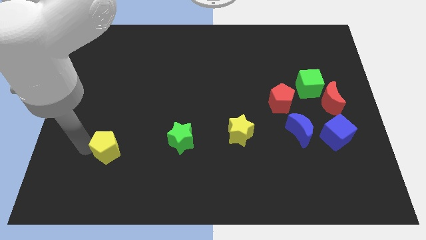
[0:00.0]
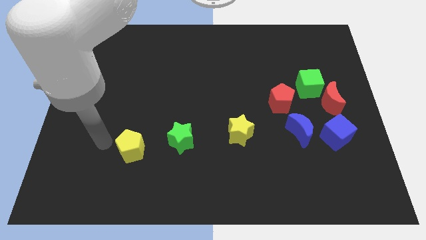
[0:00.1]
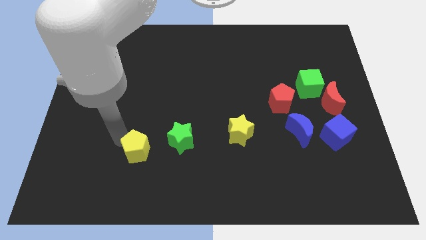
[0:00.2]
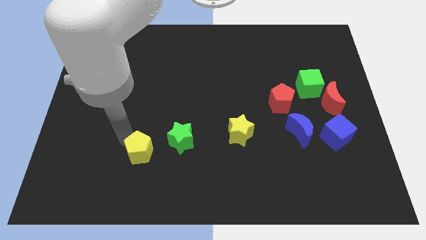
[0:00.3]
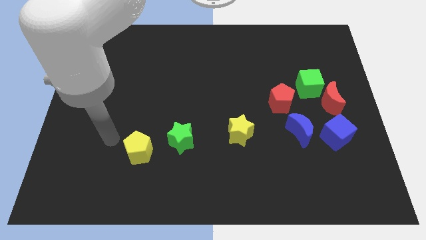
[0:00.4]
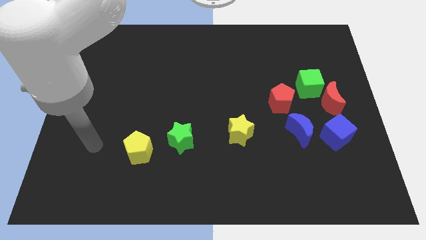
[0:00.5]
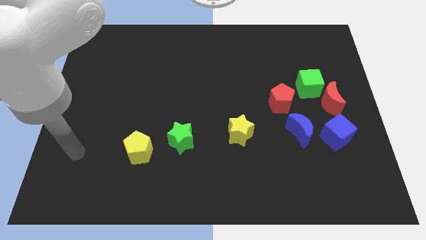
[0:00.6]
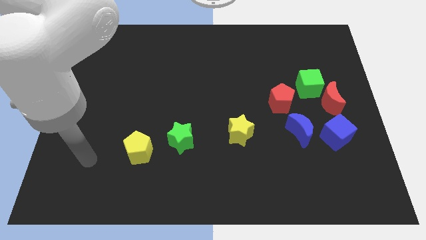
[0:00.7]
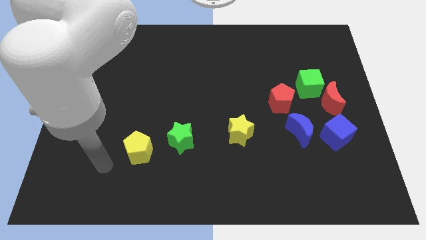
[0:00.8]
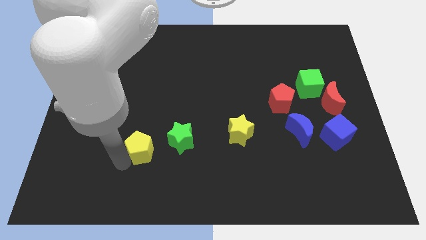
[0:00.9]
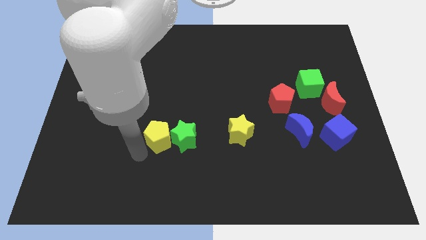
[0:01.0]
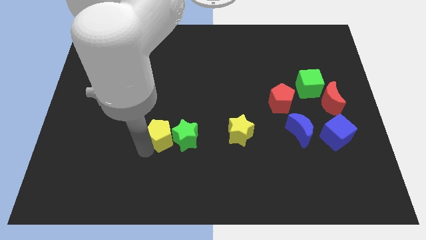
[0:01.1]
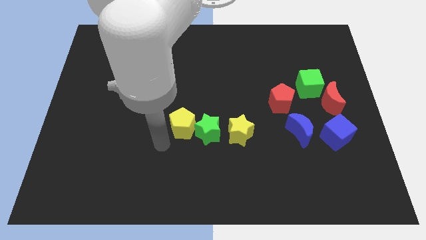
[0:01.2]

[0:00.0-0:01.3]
move the yellow pentagon into the green star

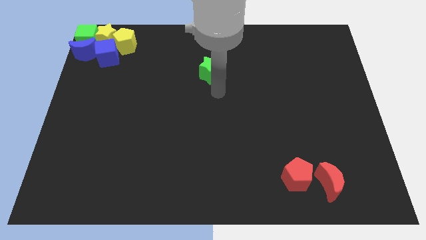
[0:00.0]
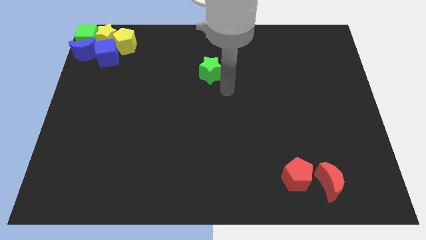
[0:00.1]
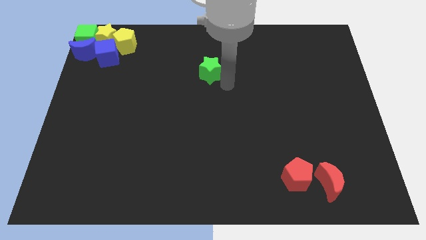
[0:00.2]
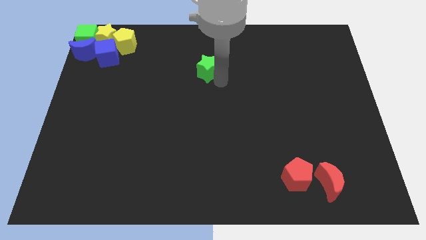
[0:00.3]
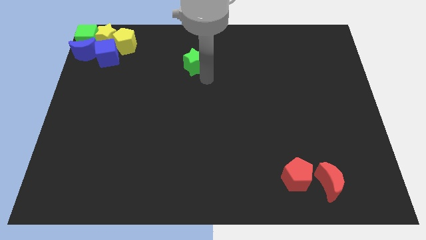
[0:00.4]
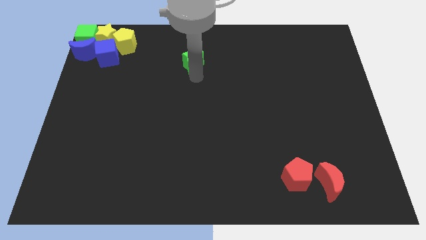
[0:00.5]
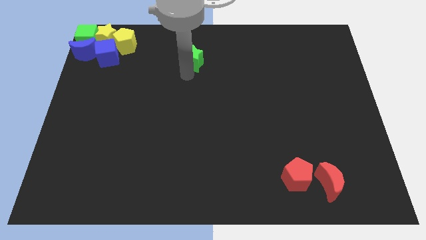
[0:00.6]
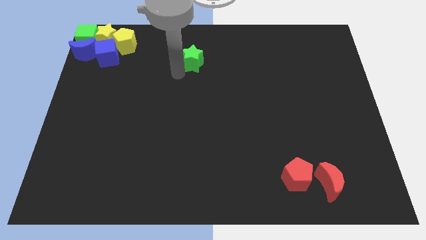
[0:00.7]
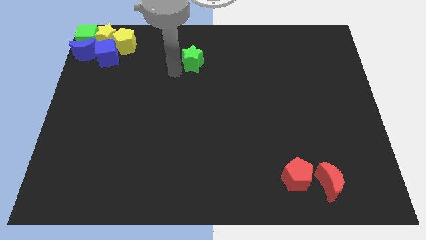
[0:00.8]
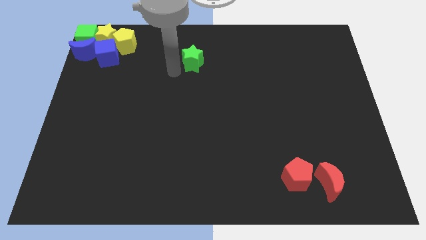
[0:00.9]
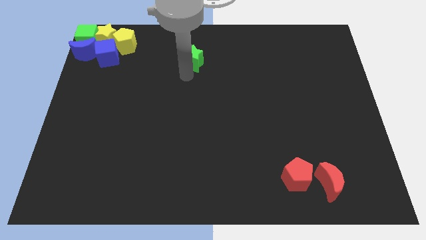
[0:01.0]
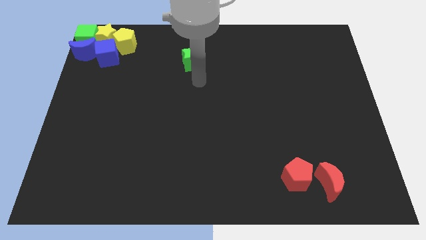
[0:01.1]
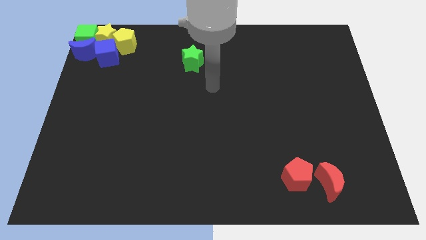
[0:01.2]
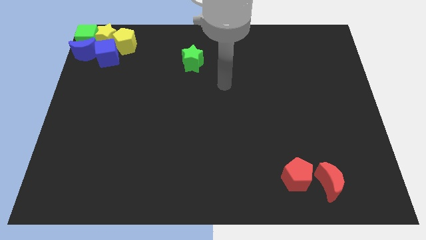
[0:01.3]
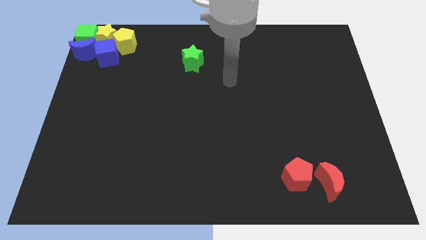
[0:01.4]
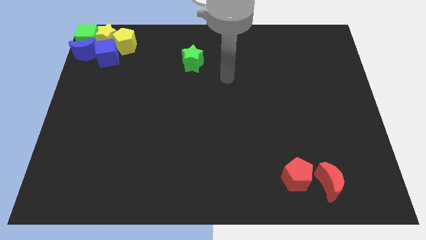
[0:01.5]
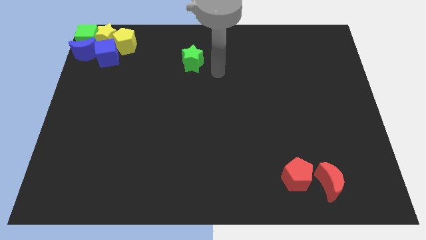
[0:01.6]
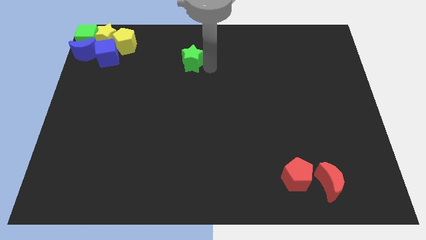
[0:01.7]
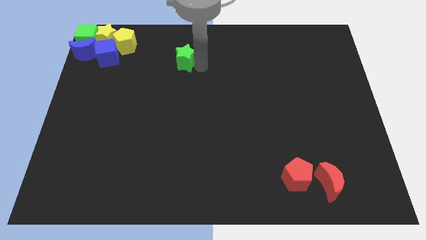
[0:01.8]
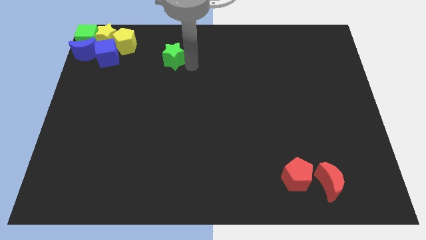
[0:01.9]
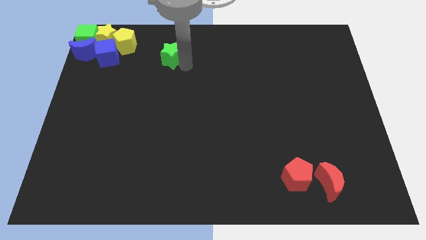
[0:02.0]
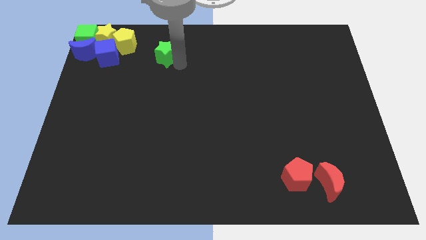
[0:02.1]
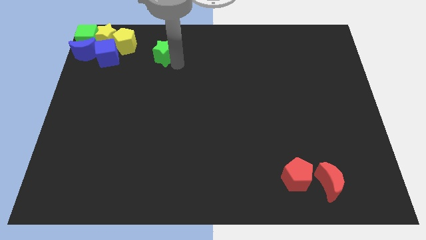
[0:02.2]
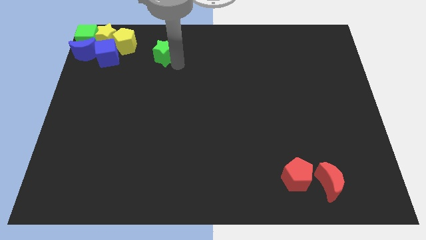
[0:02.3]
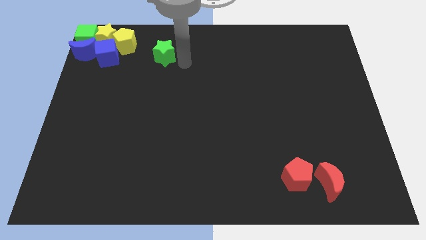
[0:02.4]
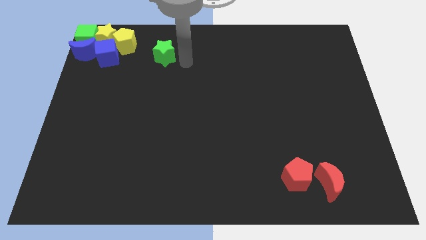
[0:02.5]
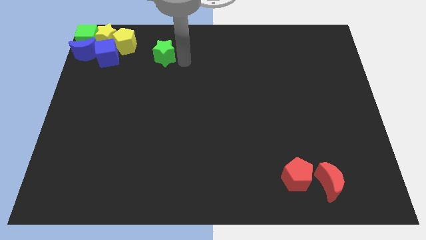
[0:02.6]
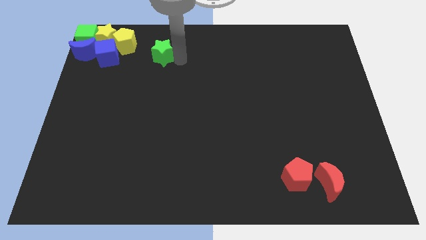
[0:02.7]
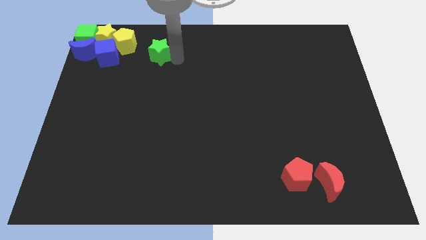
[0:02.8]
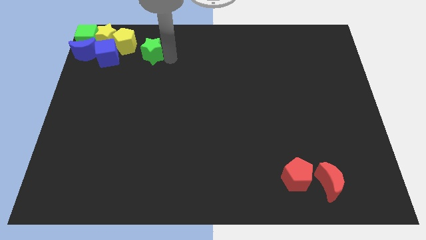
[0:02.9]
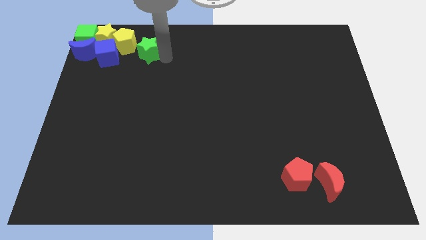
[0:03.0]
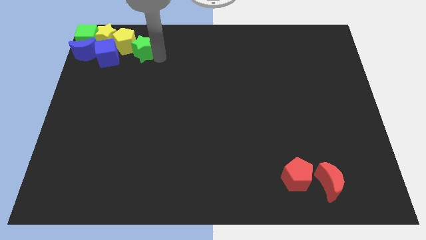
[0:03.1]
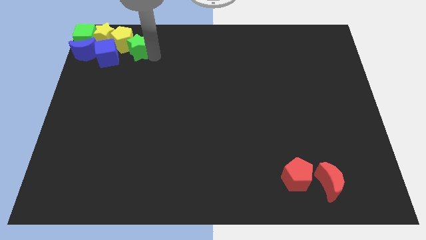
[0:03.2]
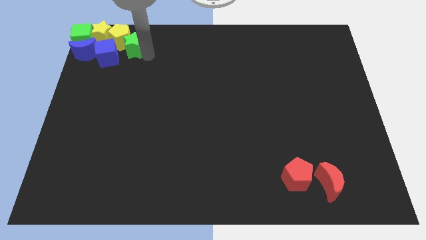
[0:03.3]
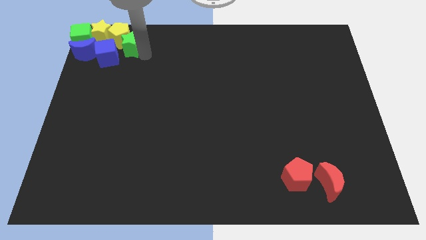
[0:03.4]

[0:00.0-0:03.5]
put the green star at the bottom left of the yellow pentagon

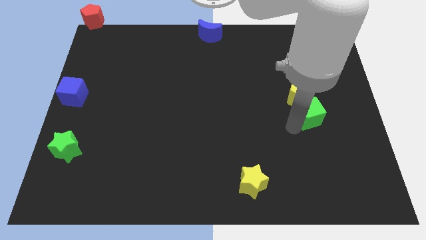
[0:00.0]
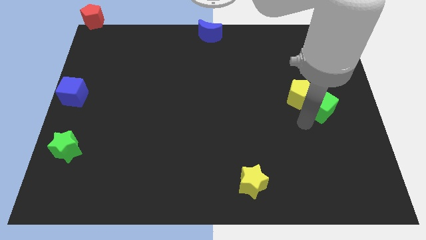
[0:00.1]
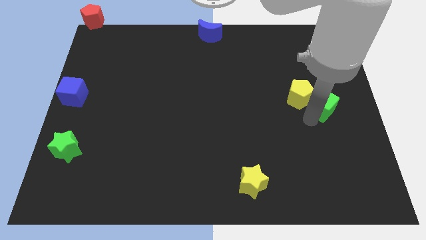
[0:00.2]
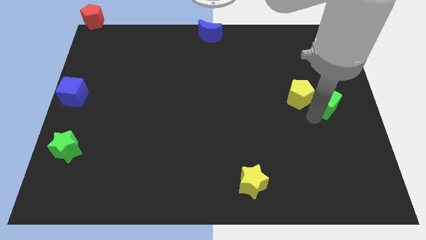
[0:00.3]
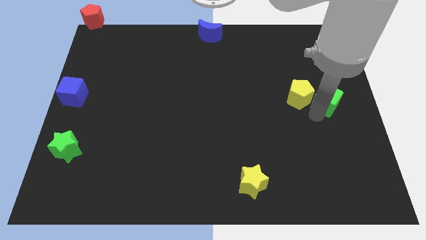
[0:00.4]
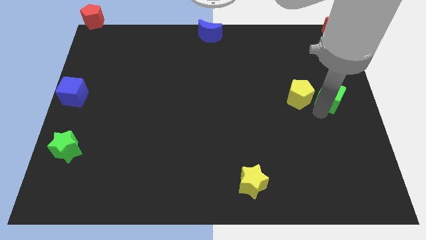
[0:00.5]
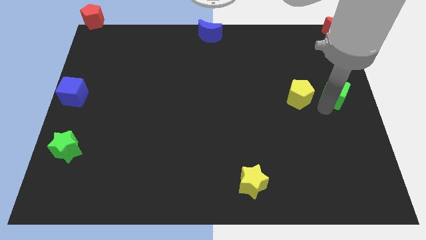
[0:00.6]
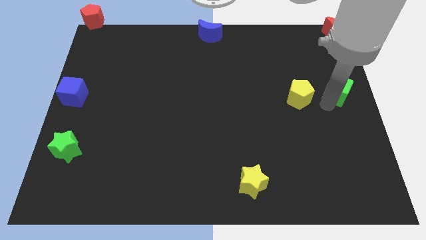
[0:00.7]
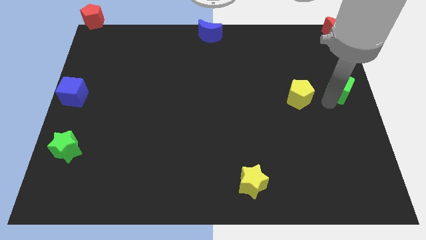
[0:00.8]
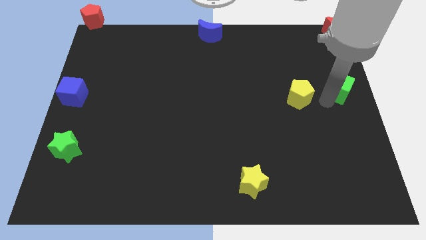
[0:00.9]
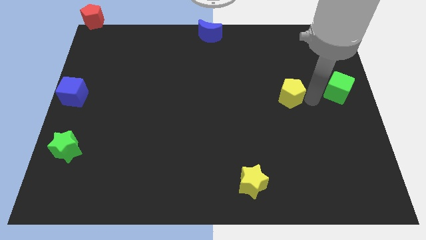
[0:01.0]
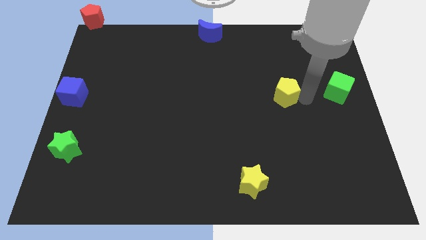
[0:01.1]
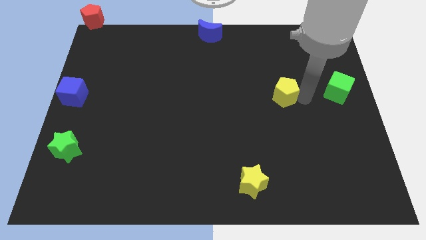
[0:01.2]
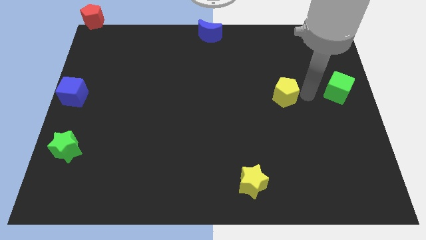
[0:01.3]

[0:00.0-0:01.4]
move green cube and the yellow pentagon away from each other

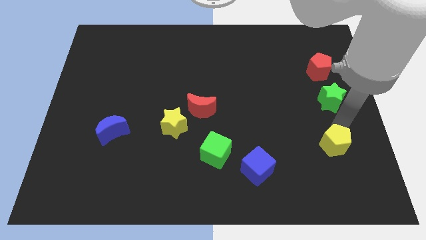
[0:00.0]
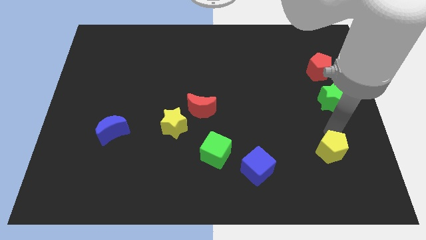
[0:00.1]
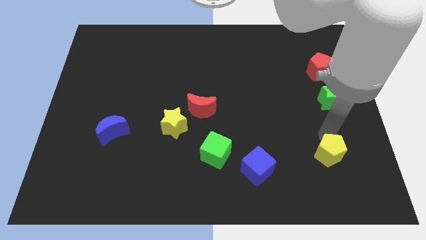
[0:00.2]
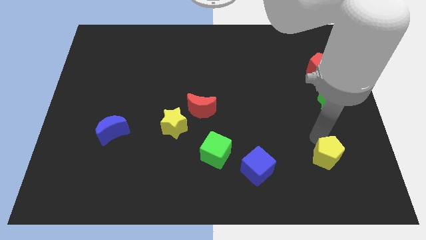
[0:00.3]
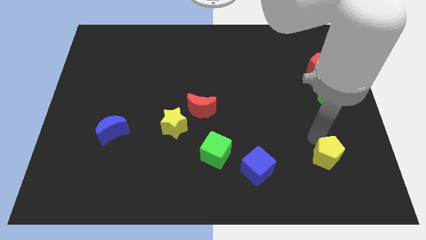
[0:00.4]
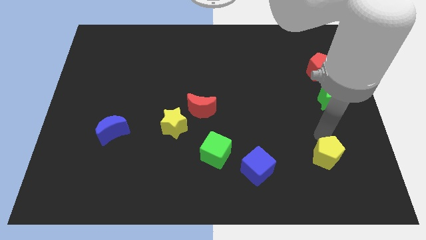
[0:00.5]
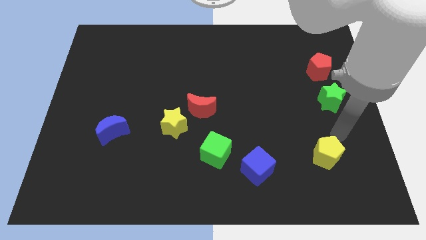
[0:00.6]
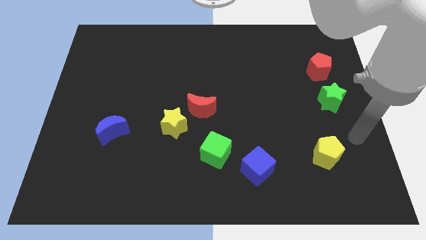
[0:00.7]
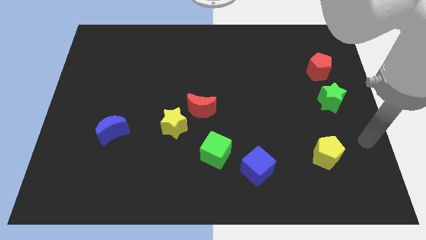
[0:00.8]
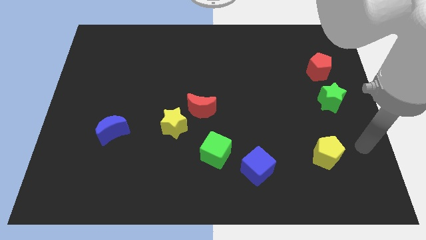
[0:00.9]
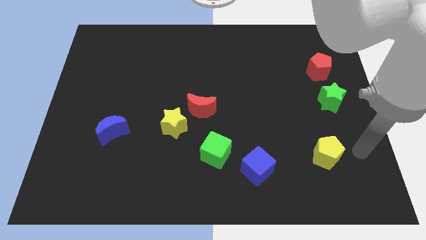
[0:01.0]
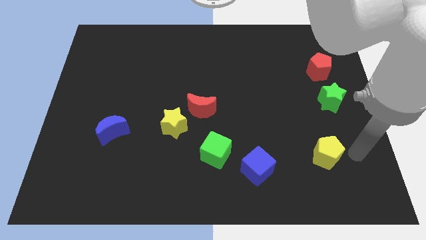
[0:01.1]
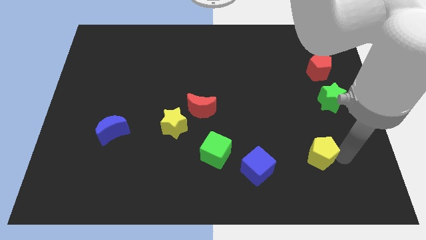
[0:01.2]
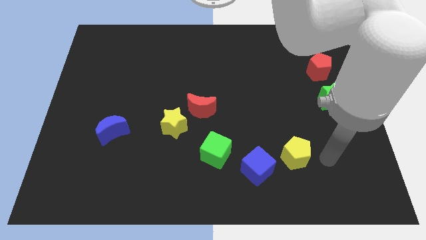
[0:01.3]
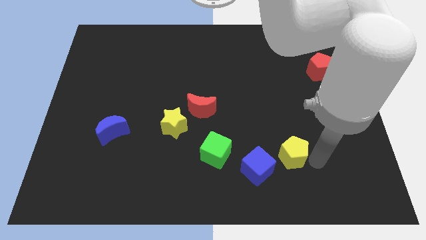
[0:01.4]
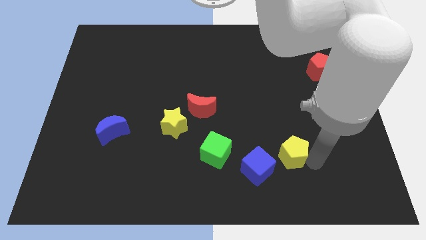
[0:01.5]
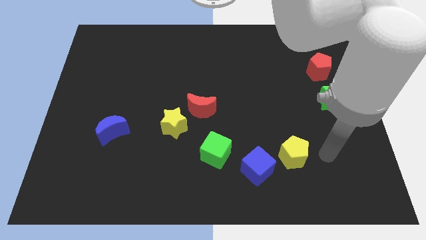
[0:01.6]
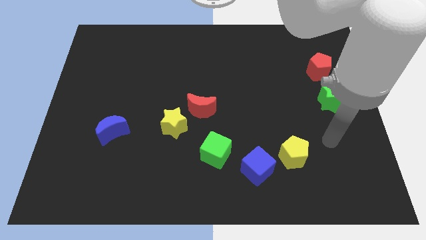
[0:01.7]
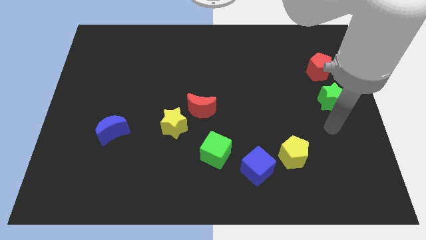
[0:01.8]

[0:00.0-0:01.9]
place the yellow pentagon to the top right of the blue cube

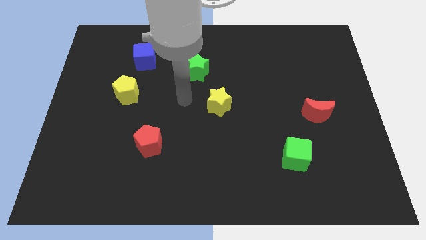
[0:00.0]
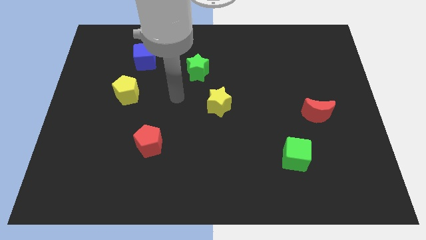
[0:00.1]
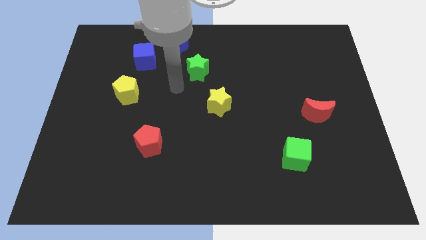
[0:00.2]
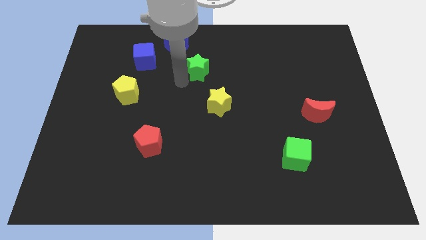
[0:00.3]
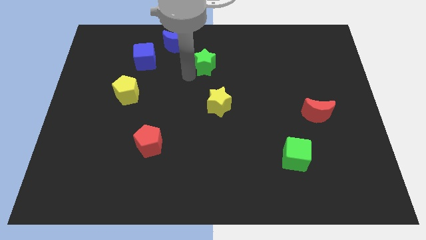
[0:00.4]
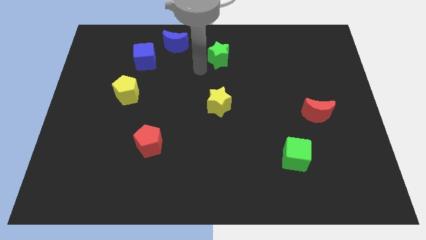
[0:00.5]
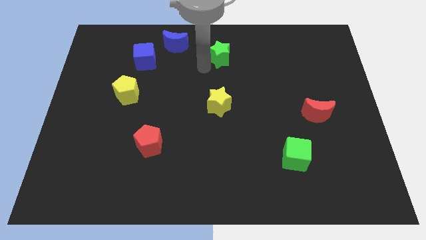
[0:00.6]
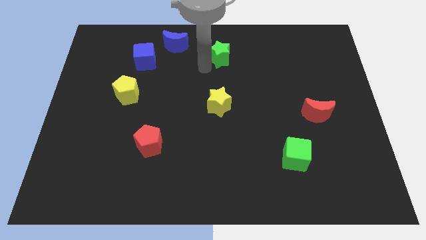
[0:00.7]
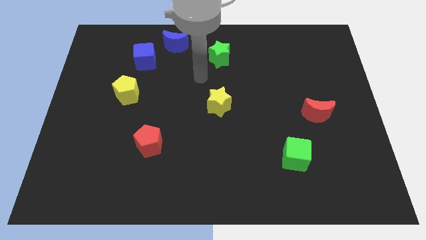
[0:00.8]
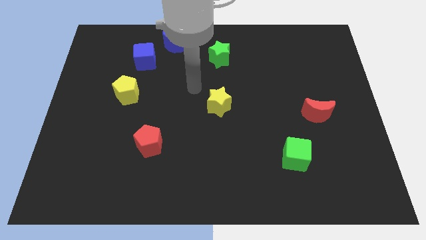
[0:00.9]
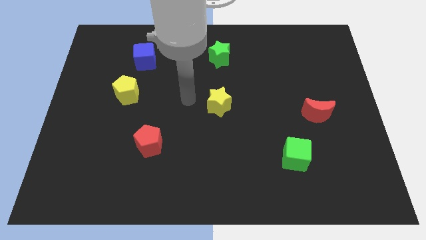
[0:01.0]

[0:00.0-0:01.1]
move green star horizontally
